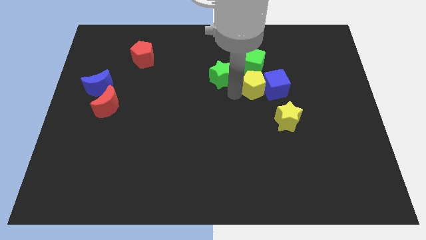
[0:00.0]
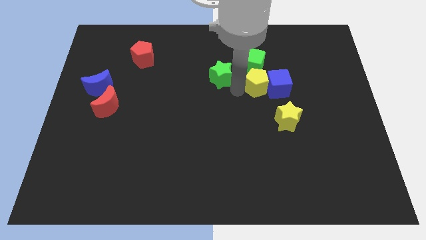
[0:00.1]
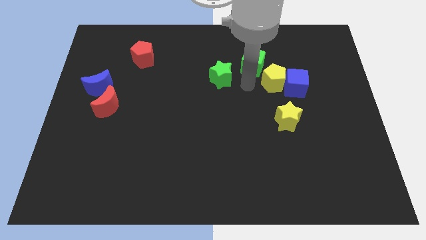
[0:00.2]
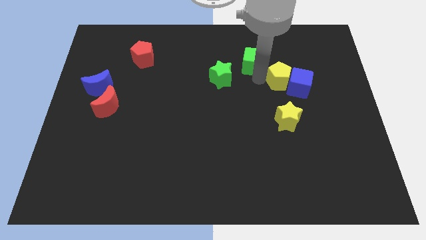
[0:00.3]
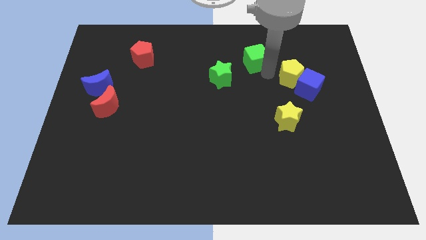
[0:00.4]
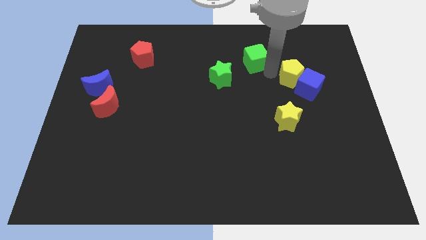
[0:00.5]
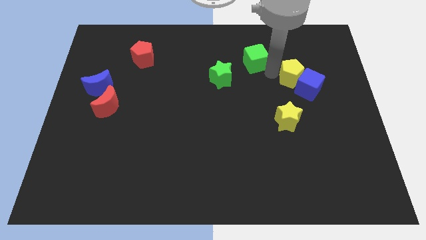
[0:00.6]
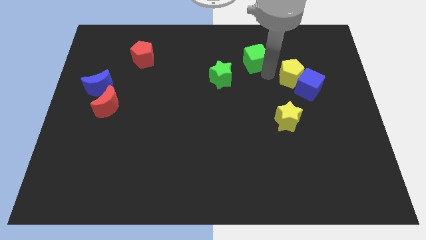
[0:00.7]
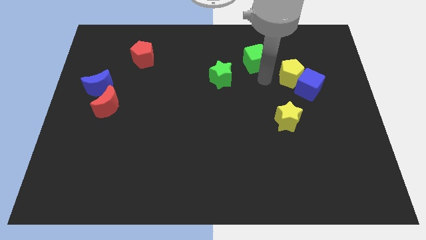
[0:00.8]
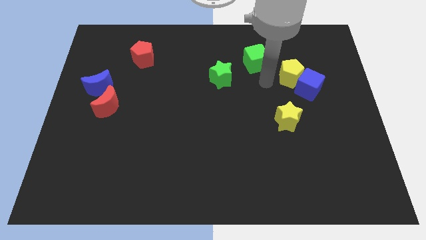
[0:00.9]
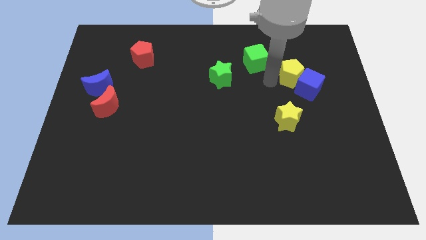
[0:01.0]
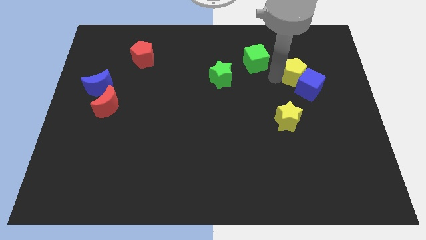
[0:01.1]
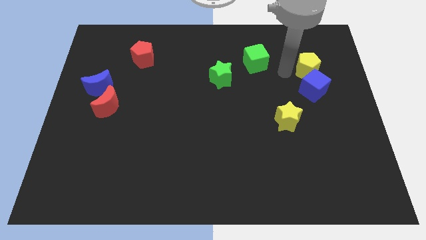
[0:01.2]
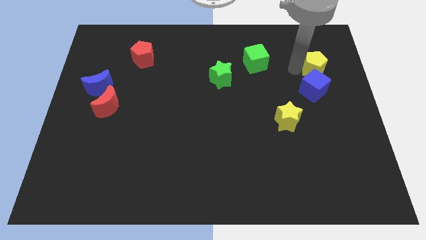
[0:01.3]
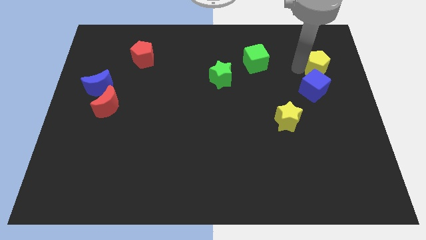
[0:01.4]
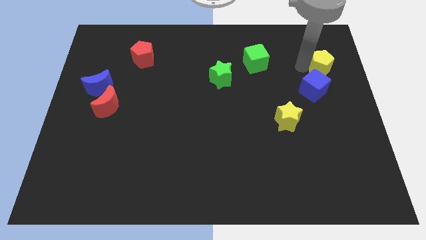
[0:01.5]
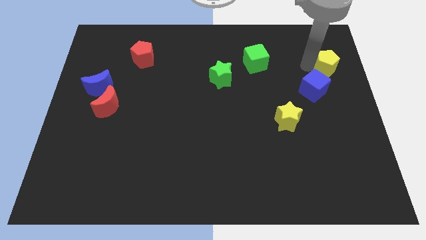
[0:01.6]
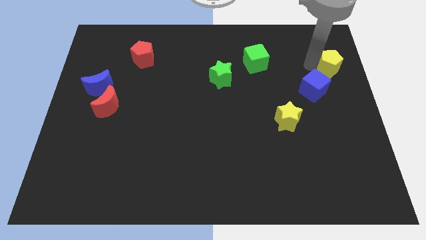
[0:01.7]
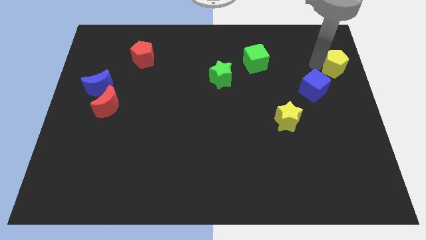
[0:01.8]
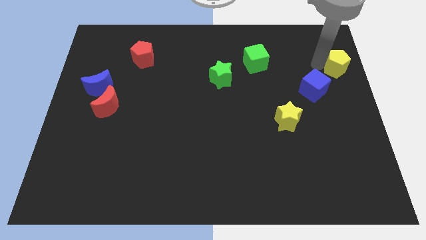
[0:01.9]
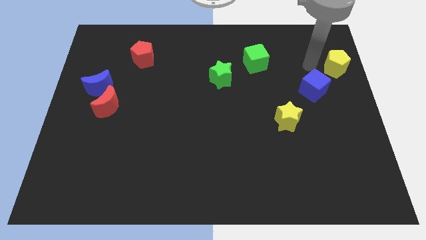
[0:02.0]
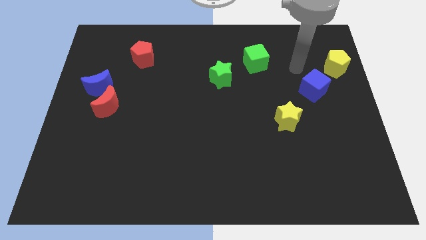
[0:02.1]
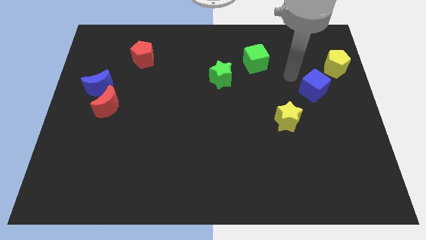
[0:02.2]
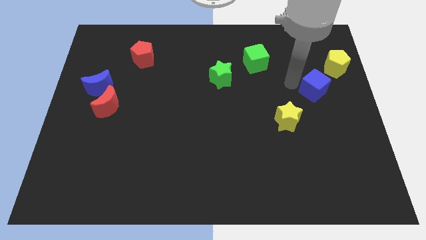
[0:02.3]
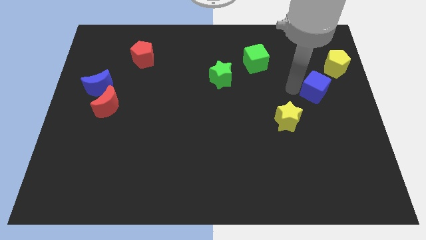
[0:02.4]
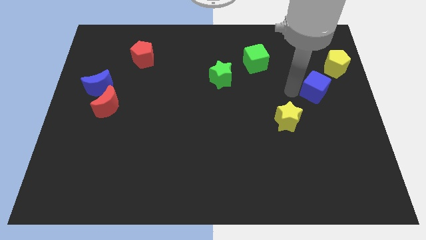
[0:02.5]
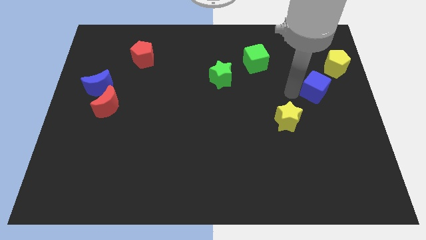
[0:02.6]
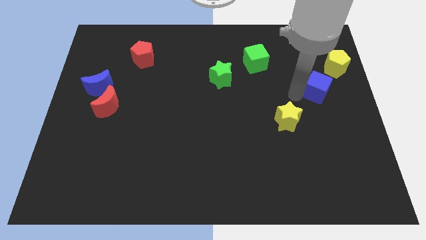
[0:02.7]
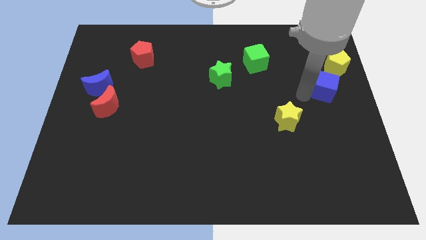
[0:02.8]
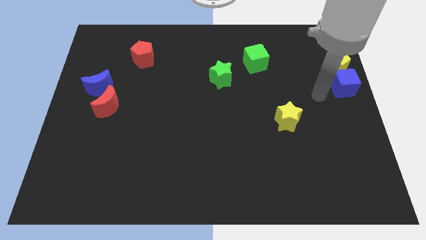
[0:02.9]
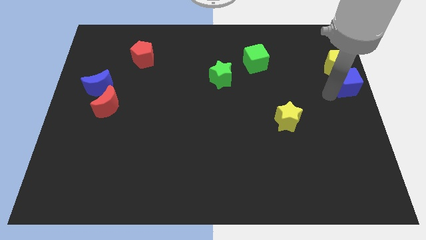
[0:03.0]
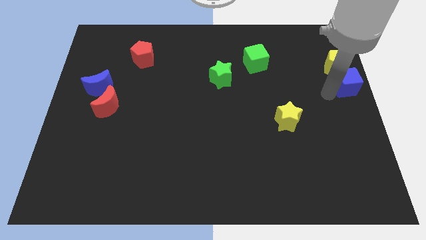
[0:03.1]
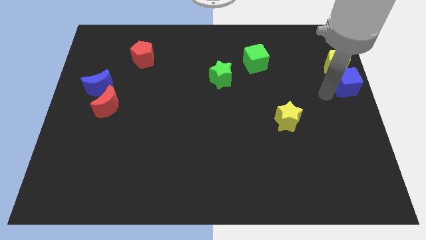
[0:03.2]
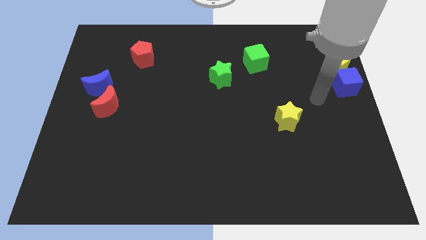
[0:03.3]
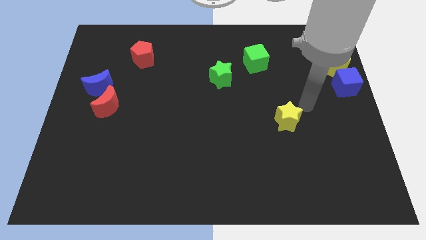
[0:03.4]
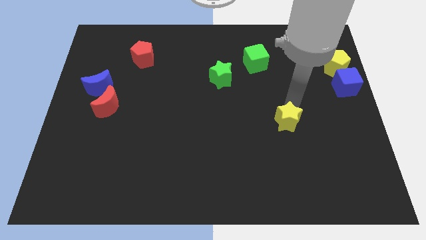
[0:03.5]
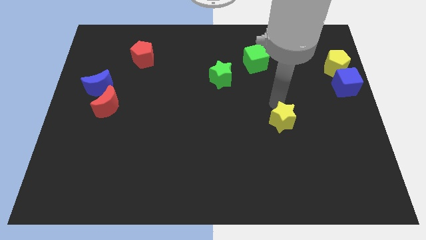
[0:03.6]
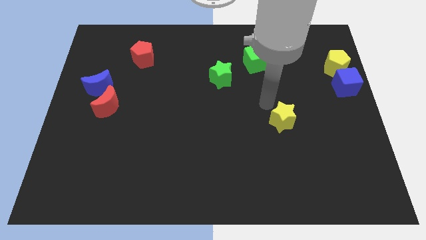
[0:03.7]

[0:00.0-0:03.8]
move the blue cube and the yellow pentagon to the right of the board

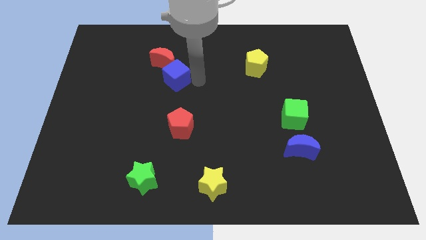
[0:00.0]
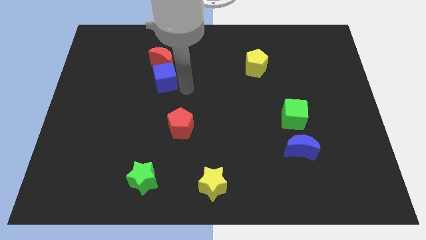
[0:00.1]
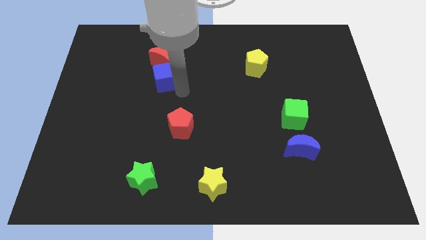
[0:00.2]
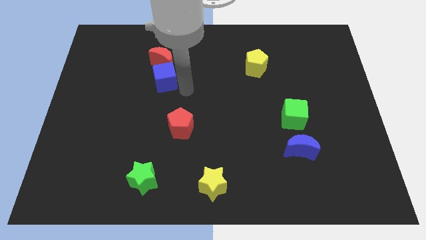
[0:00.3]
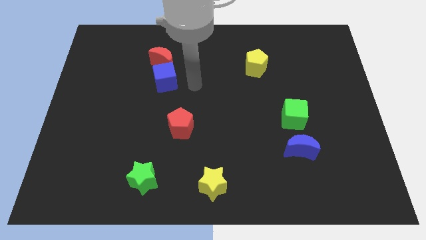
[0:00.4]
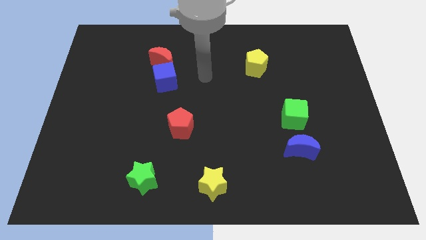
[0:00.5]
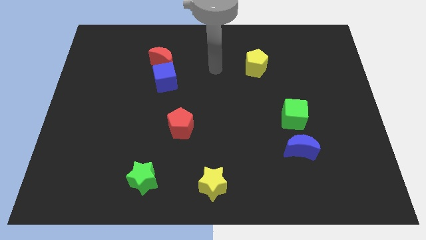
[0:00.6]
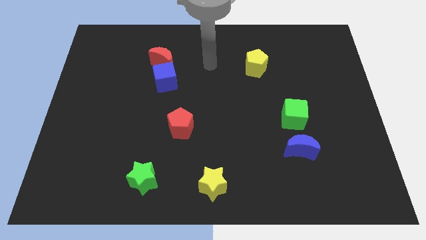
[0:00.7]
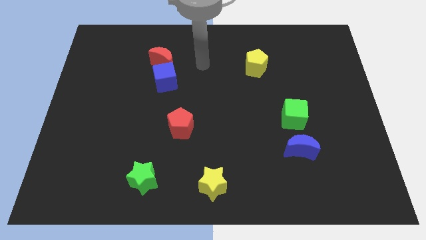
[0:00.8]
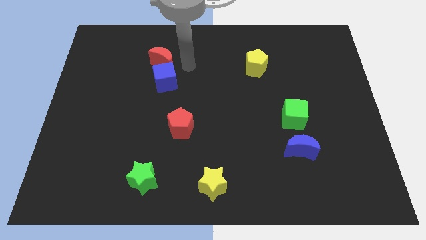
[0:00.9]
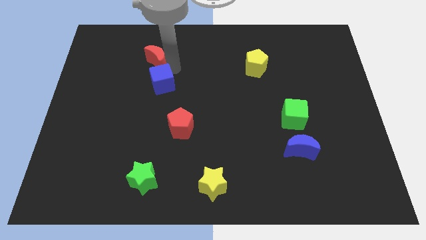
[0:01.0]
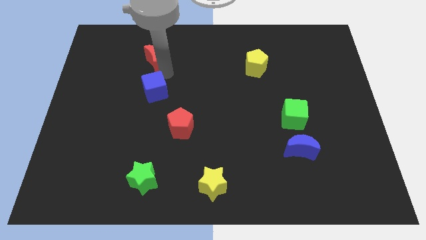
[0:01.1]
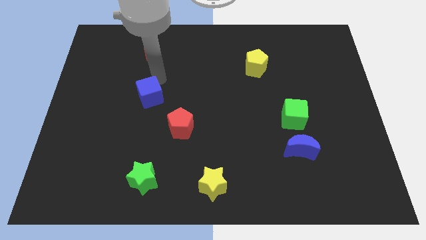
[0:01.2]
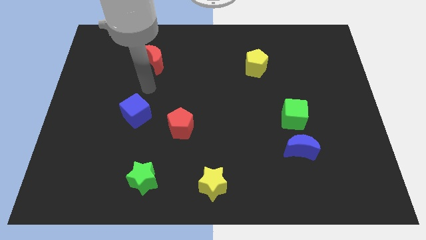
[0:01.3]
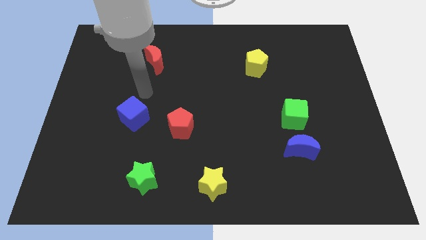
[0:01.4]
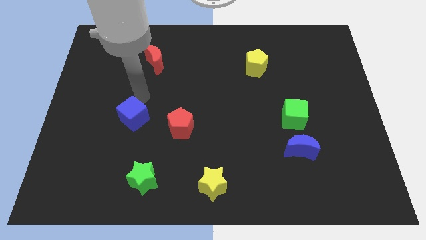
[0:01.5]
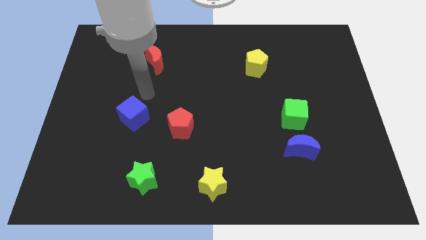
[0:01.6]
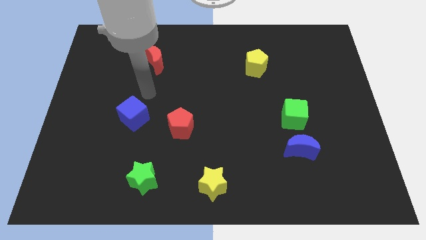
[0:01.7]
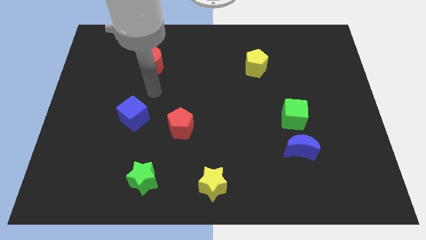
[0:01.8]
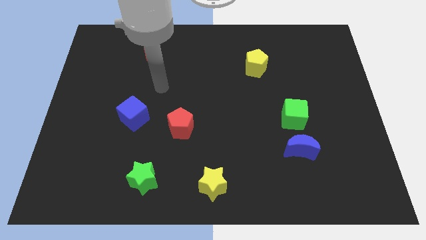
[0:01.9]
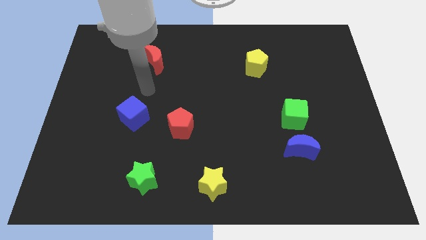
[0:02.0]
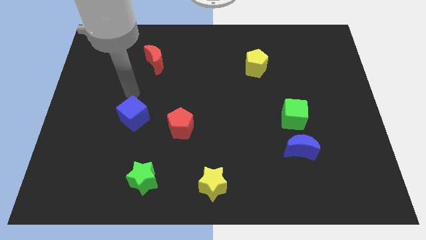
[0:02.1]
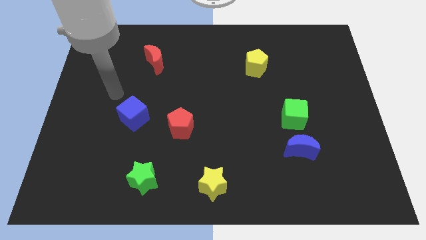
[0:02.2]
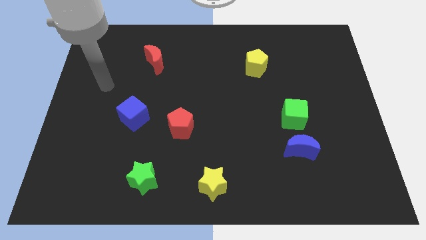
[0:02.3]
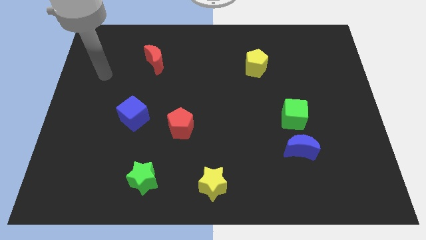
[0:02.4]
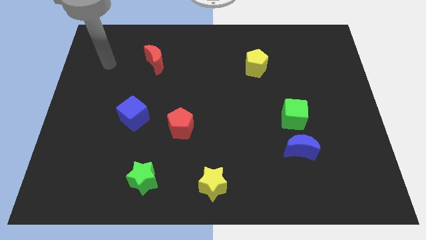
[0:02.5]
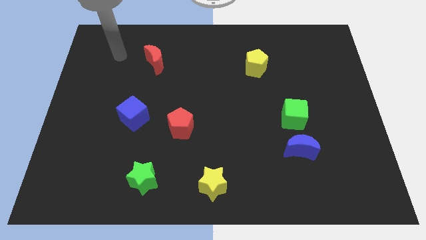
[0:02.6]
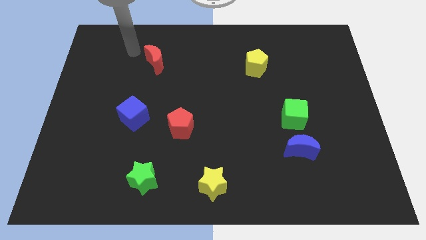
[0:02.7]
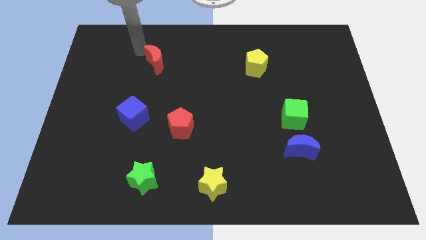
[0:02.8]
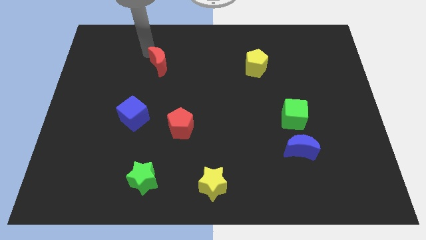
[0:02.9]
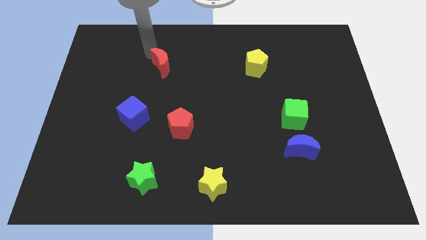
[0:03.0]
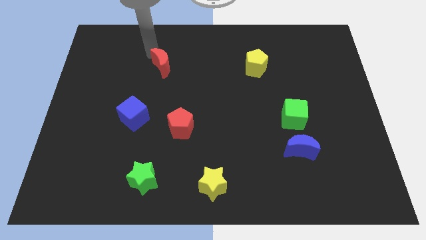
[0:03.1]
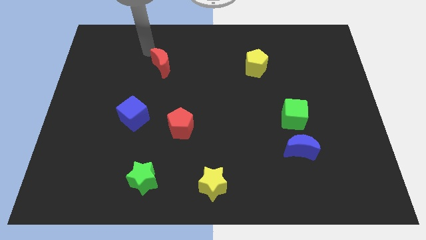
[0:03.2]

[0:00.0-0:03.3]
make a triangle by placing blue cube

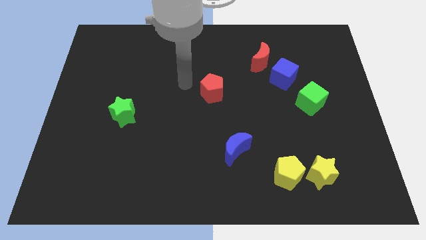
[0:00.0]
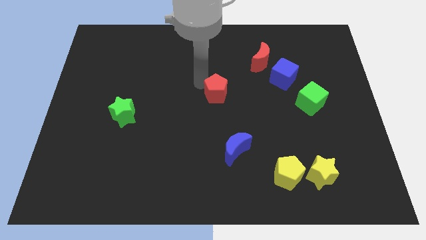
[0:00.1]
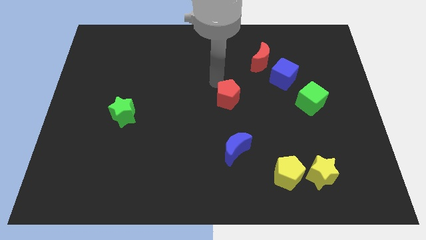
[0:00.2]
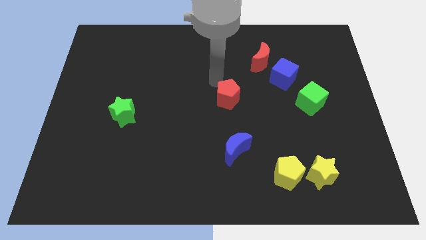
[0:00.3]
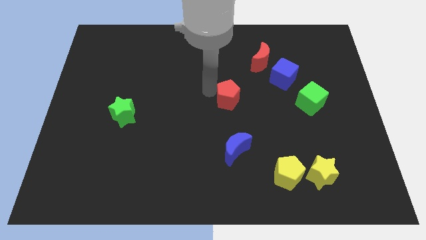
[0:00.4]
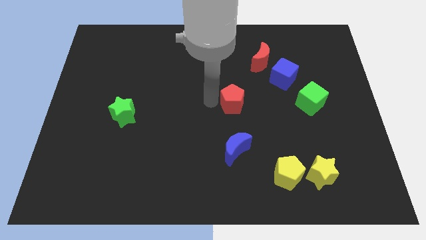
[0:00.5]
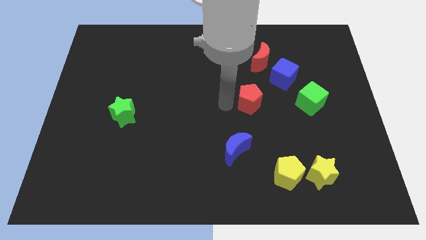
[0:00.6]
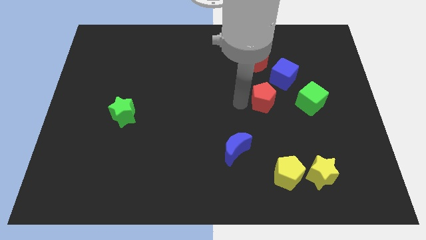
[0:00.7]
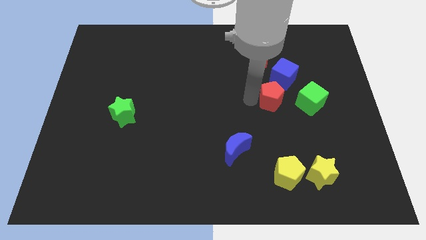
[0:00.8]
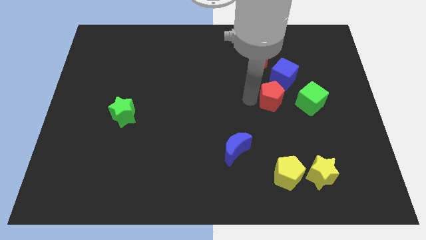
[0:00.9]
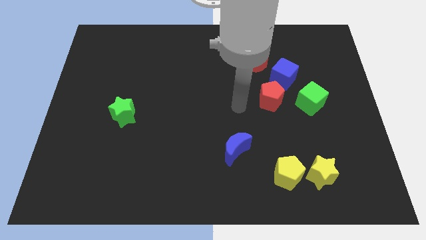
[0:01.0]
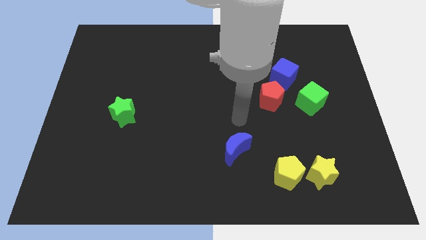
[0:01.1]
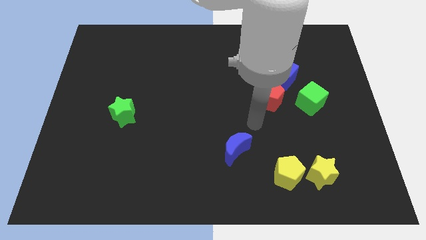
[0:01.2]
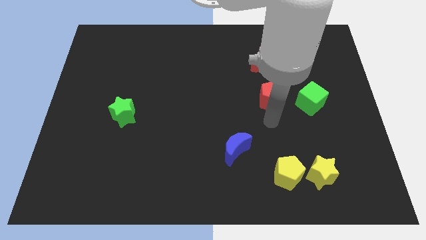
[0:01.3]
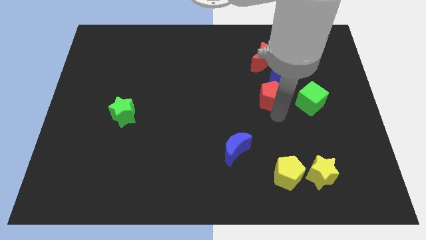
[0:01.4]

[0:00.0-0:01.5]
push the red pentagon into the blue cube

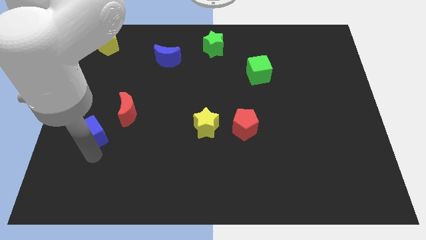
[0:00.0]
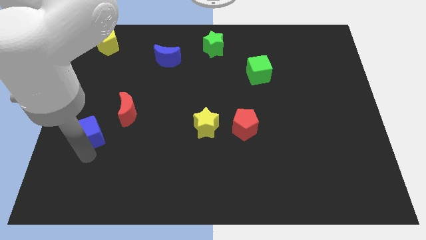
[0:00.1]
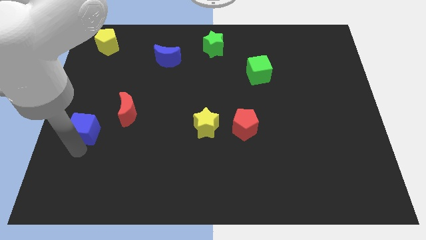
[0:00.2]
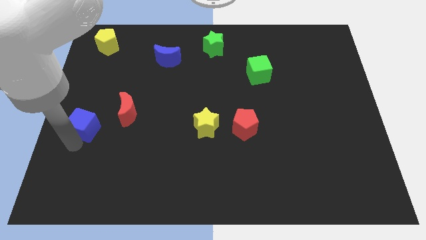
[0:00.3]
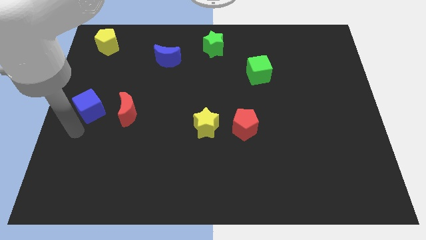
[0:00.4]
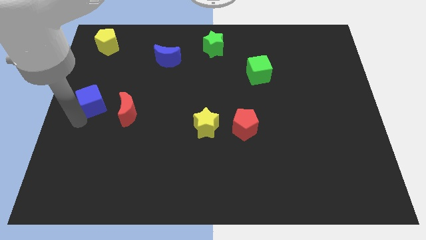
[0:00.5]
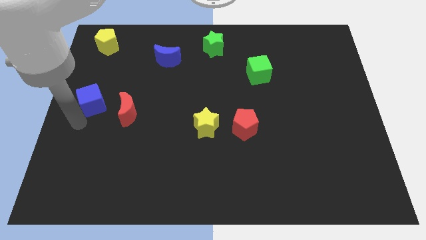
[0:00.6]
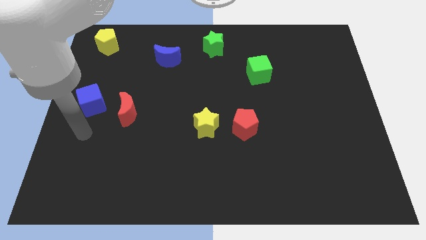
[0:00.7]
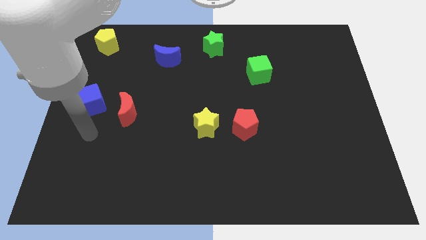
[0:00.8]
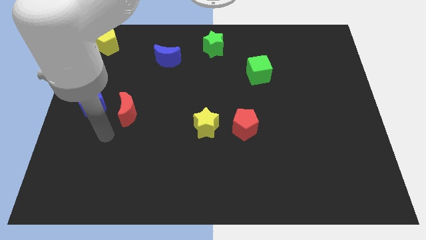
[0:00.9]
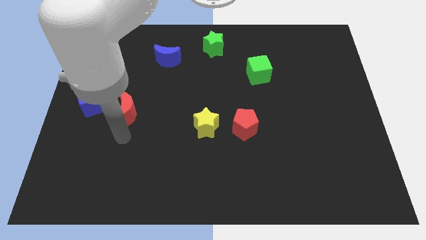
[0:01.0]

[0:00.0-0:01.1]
place the blue cube at the left side of the red crescent
